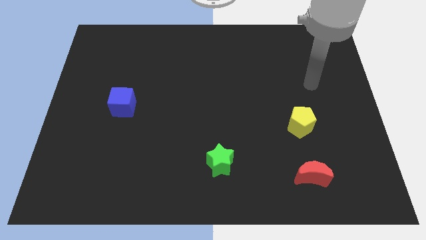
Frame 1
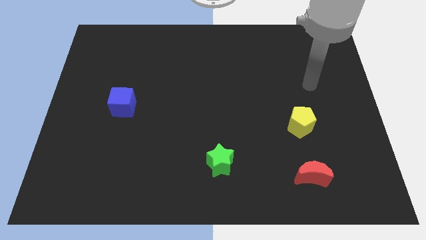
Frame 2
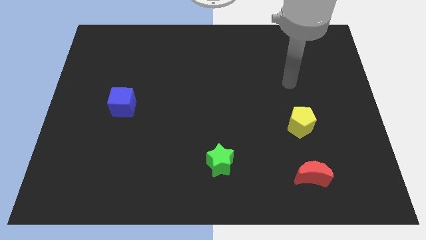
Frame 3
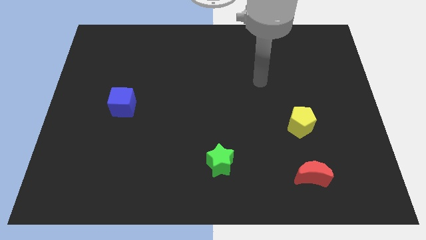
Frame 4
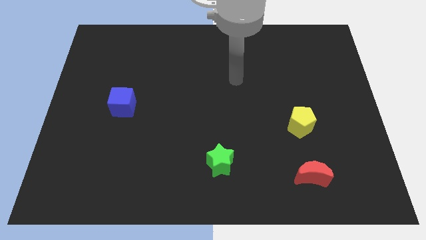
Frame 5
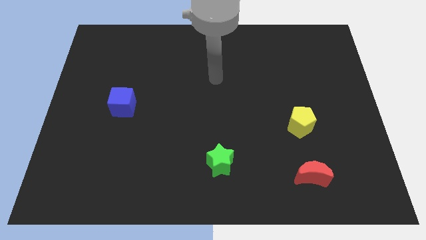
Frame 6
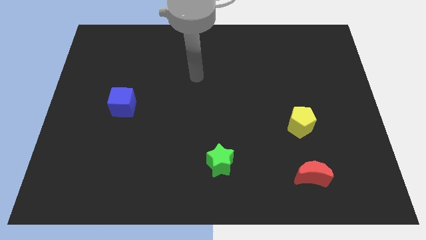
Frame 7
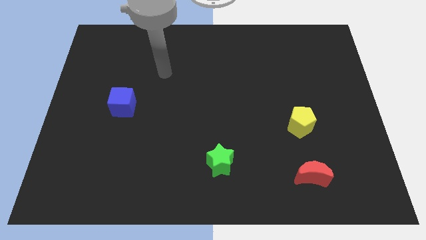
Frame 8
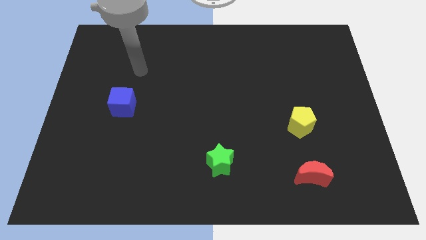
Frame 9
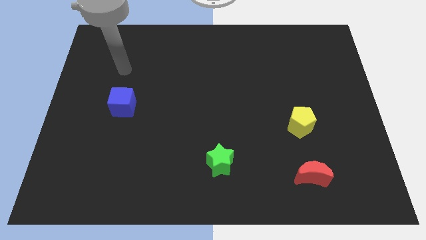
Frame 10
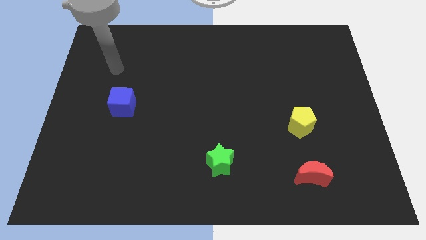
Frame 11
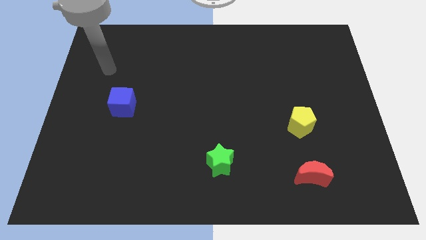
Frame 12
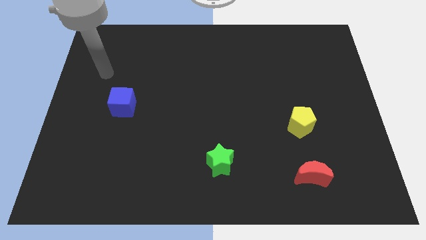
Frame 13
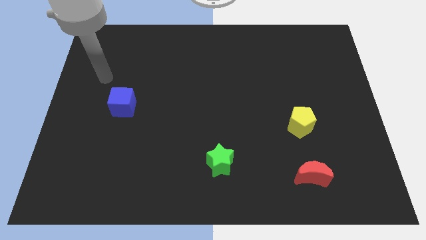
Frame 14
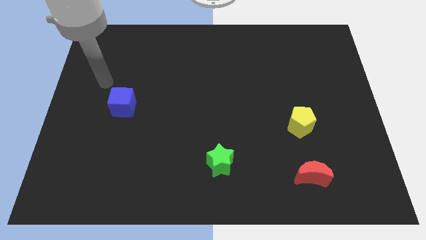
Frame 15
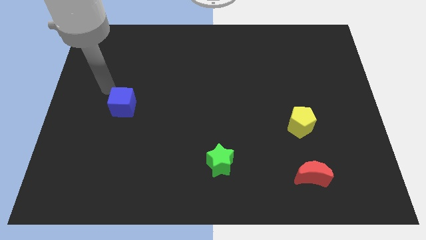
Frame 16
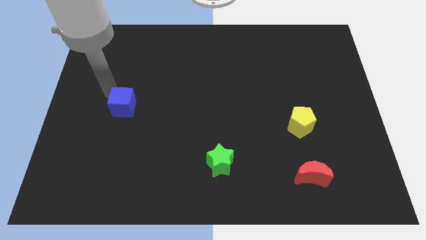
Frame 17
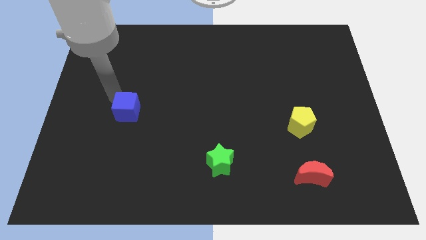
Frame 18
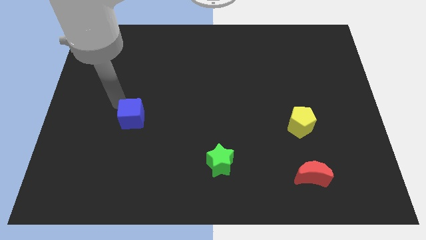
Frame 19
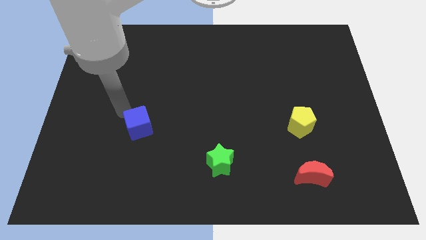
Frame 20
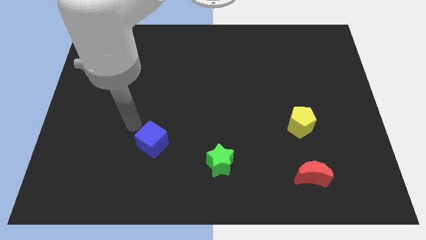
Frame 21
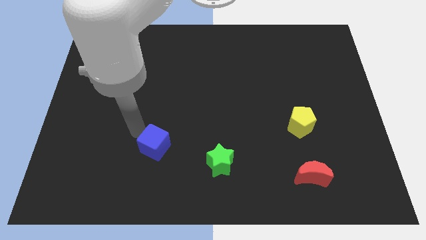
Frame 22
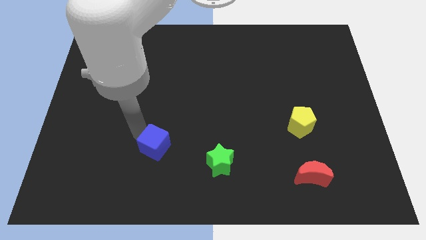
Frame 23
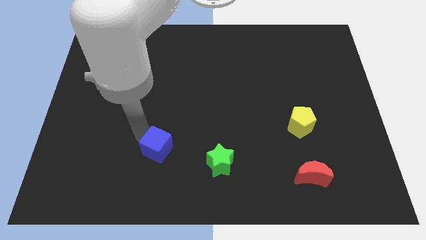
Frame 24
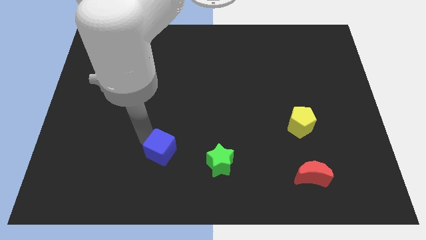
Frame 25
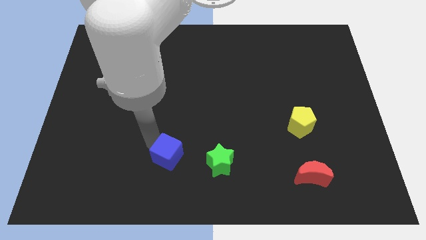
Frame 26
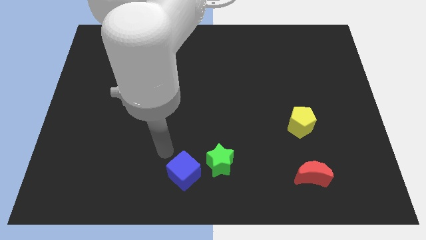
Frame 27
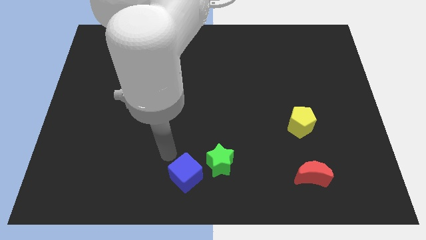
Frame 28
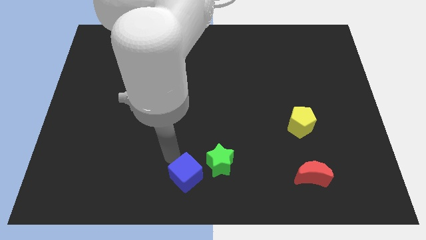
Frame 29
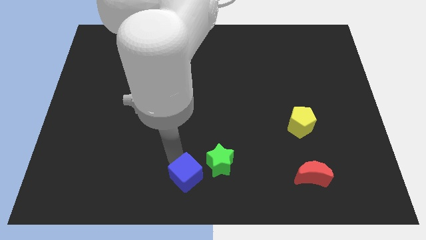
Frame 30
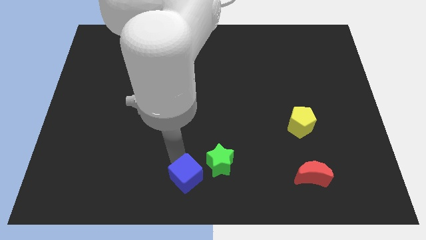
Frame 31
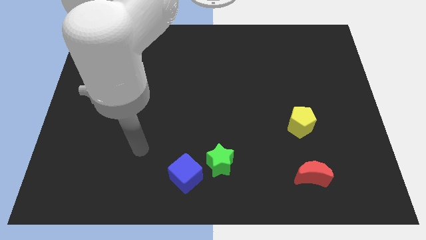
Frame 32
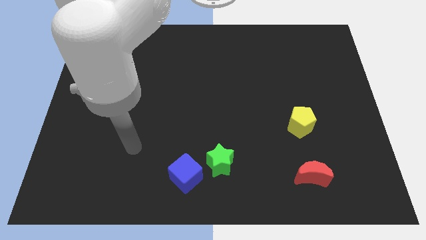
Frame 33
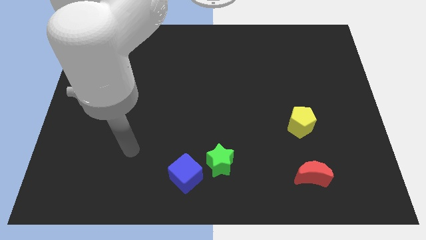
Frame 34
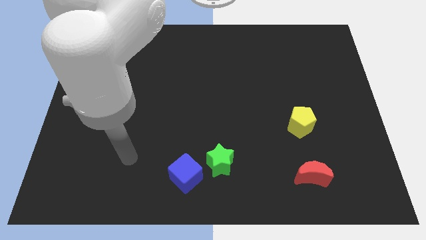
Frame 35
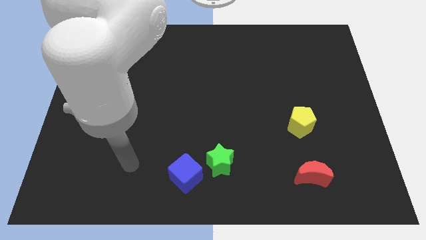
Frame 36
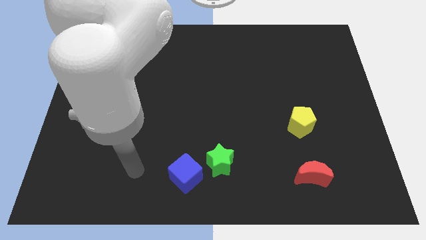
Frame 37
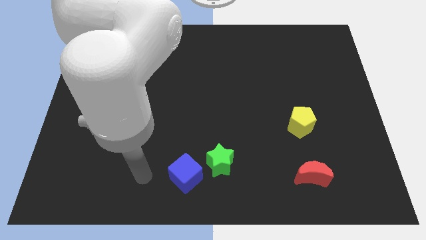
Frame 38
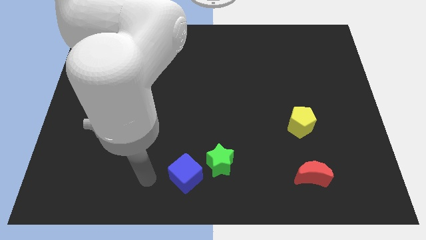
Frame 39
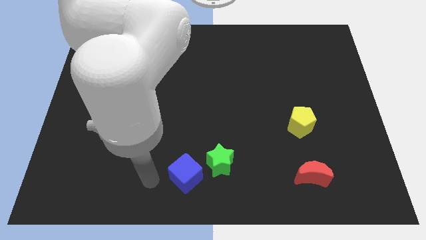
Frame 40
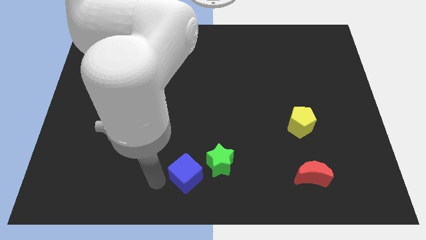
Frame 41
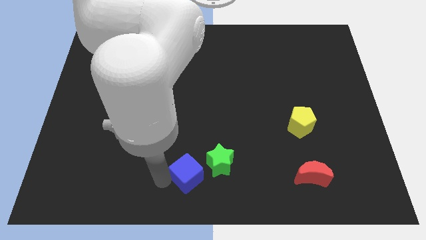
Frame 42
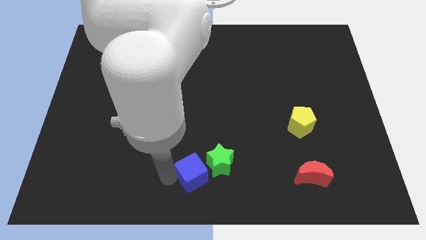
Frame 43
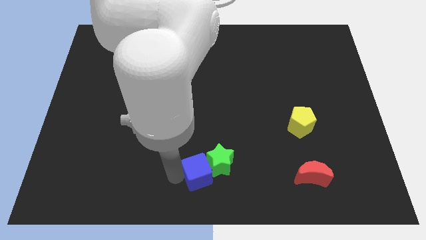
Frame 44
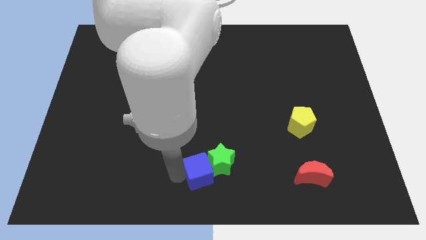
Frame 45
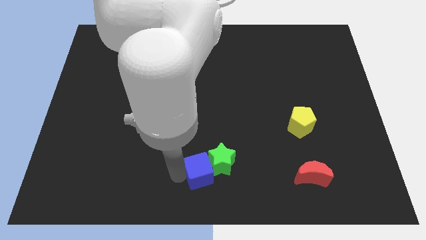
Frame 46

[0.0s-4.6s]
slide the blue cube next to the star

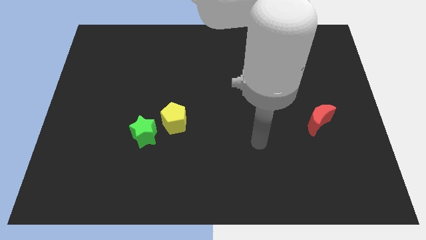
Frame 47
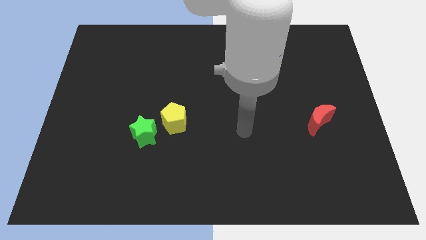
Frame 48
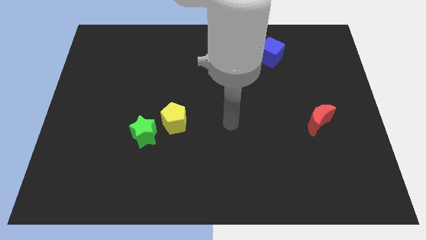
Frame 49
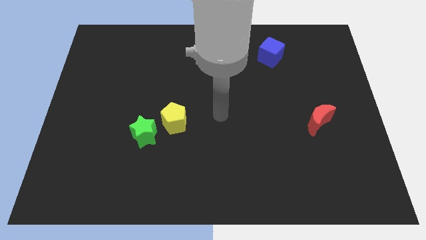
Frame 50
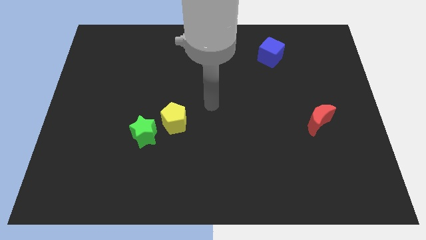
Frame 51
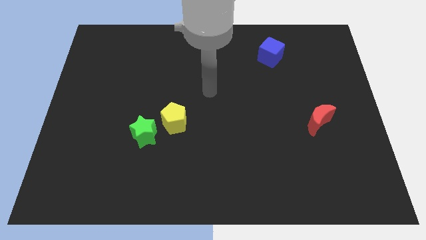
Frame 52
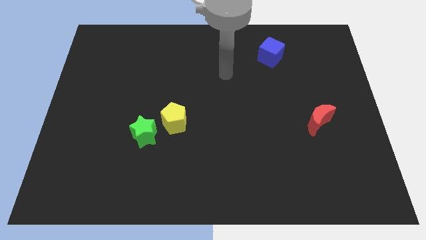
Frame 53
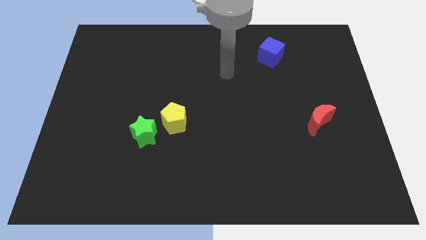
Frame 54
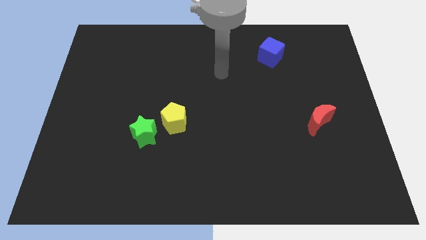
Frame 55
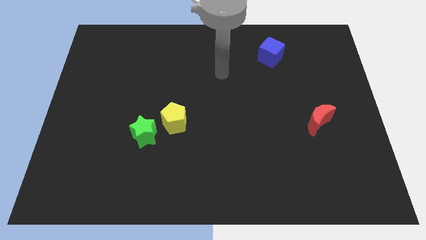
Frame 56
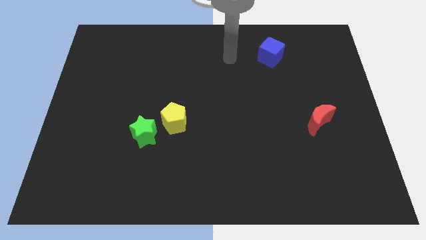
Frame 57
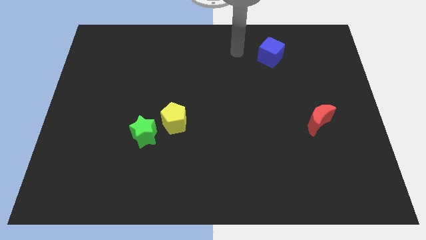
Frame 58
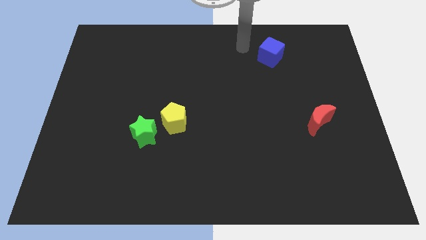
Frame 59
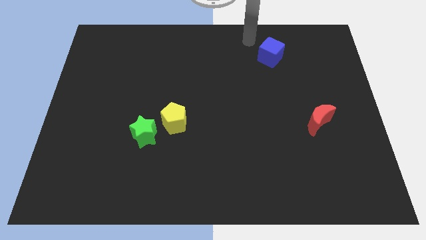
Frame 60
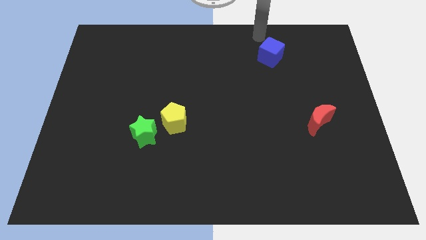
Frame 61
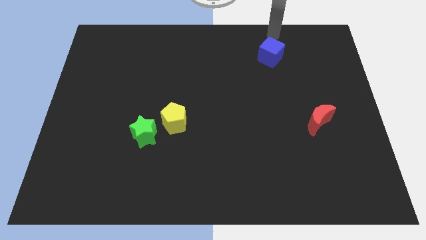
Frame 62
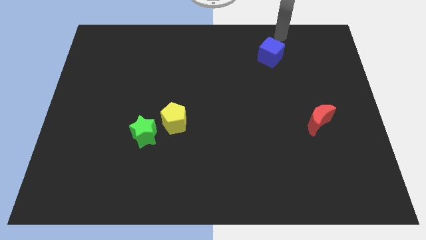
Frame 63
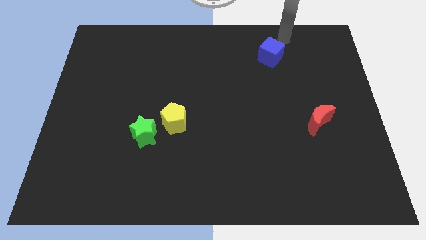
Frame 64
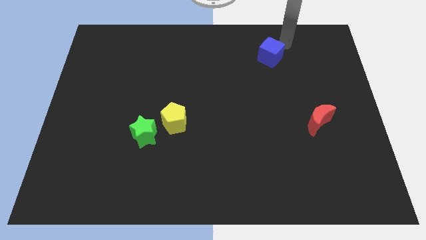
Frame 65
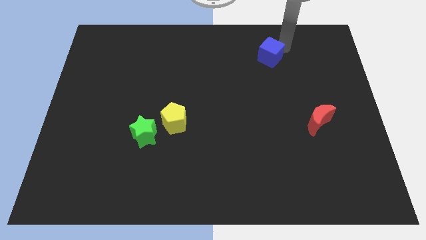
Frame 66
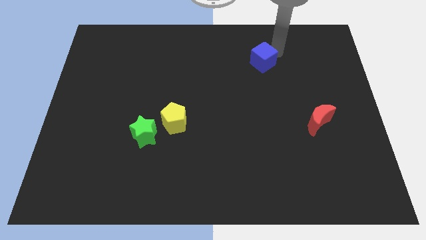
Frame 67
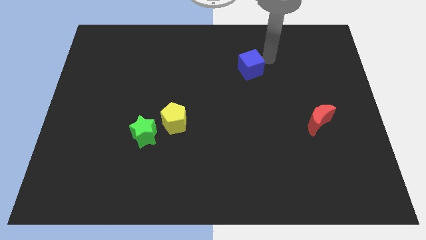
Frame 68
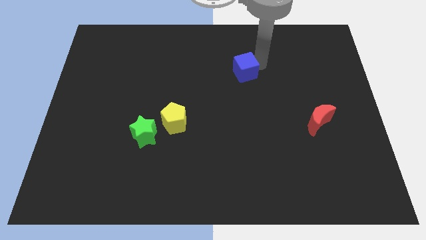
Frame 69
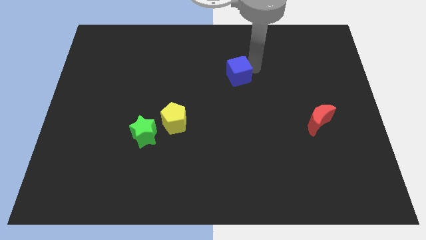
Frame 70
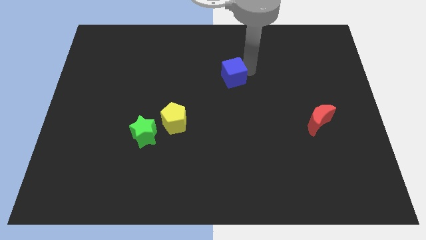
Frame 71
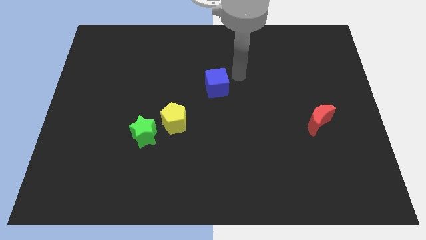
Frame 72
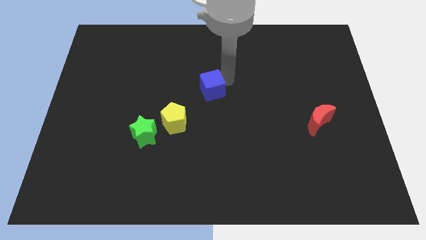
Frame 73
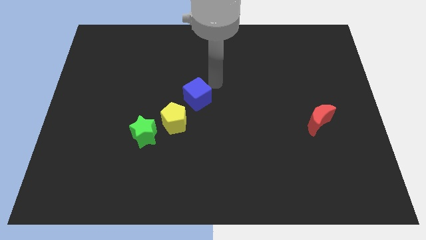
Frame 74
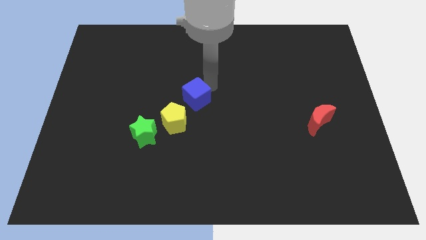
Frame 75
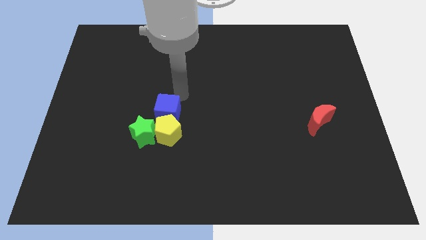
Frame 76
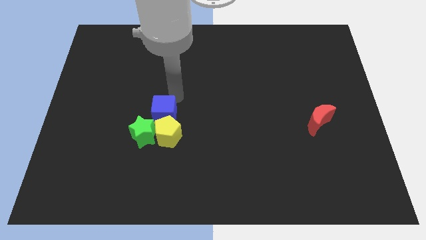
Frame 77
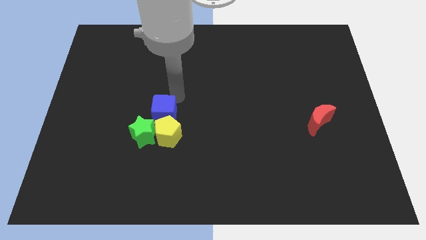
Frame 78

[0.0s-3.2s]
slide the blue cube next to the pentagon

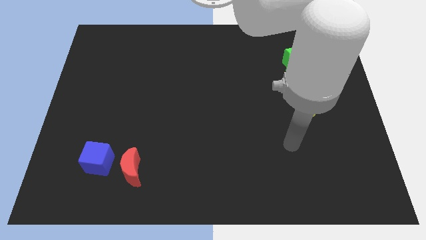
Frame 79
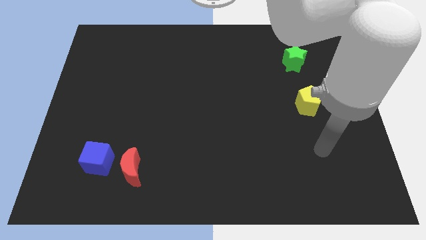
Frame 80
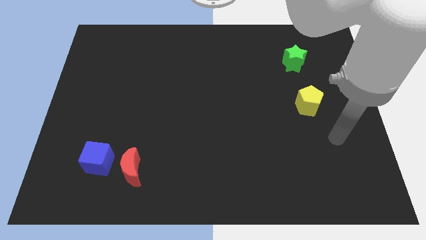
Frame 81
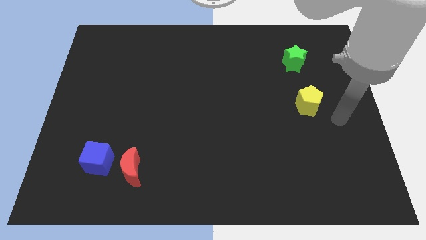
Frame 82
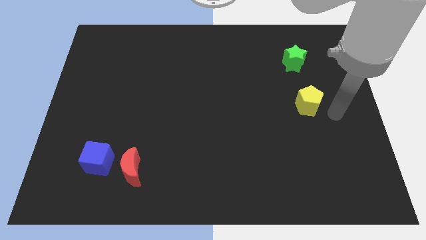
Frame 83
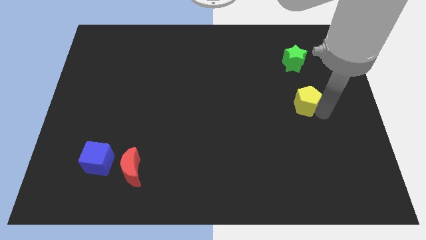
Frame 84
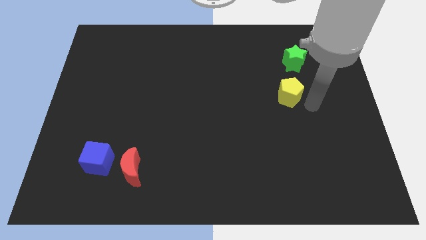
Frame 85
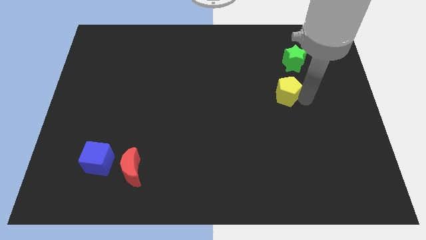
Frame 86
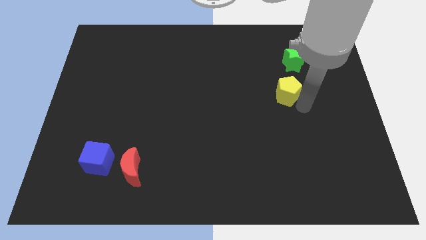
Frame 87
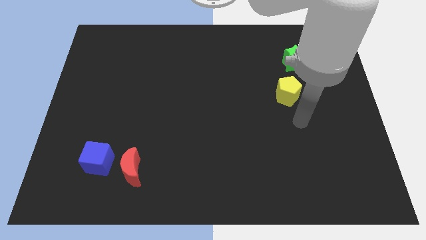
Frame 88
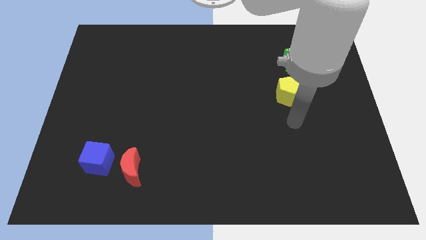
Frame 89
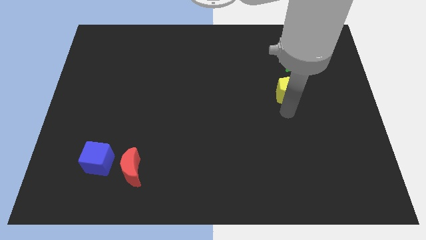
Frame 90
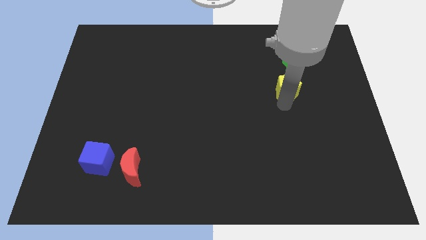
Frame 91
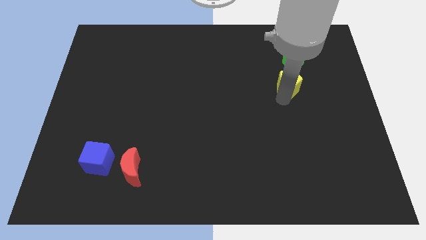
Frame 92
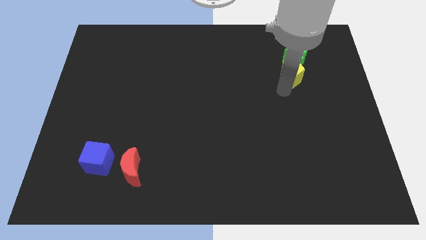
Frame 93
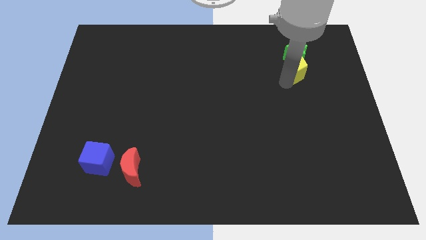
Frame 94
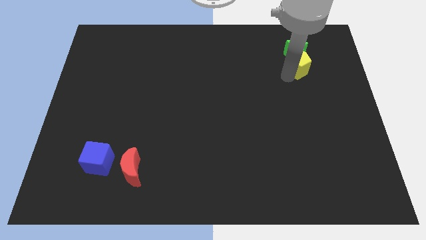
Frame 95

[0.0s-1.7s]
put the yellow pentagon to the green block
